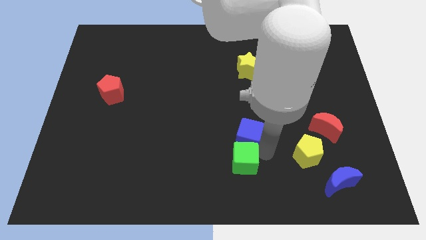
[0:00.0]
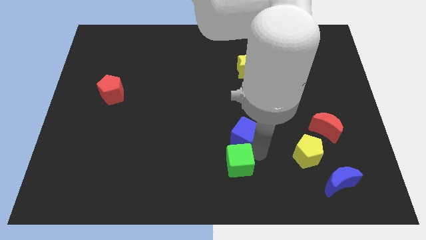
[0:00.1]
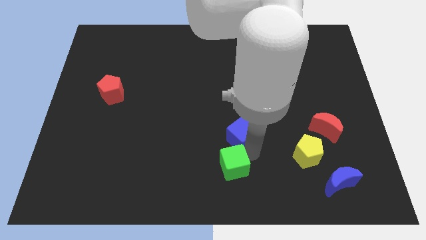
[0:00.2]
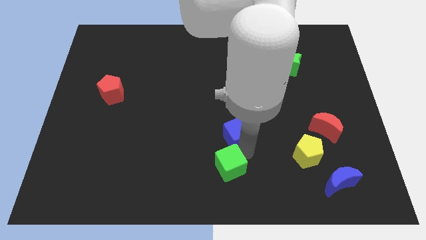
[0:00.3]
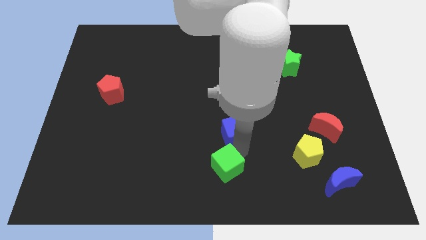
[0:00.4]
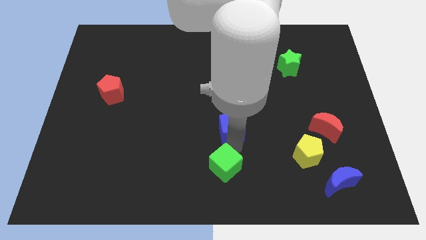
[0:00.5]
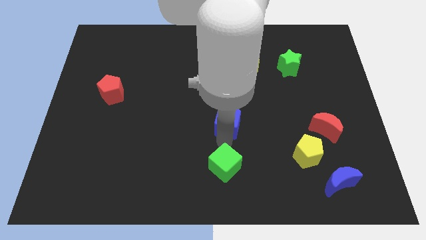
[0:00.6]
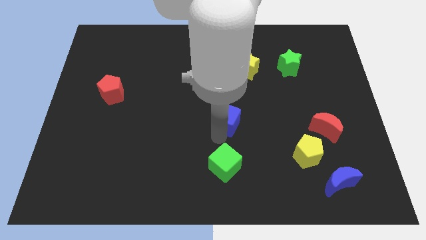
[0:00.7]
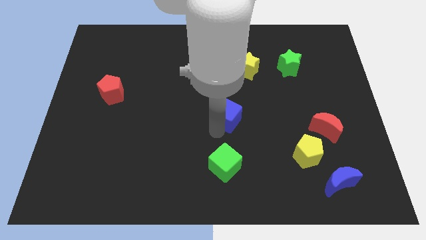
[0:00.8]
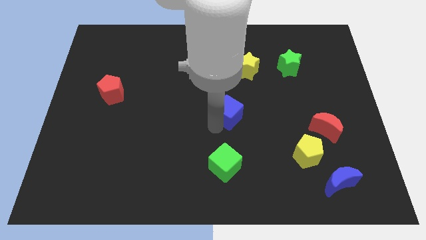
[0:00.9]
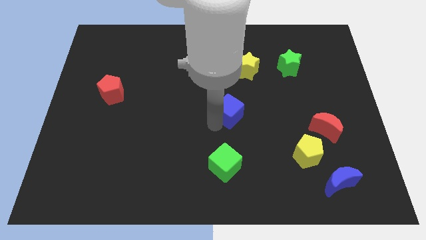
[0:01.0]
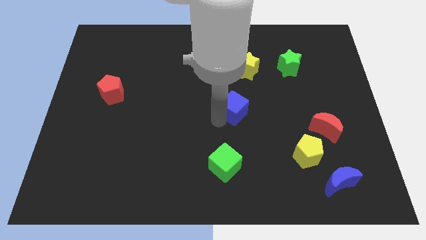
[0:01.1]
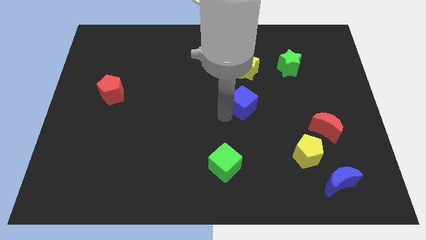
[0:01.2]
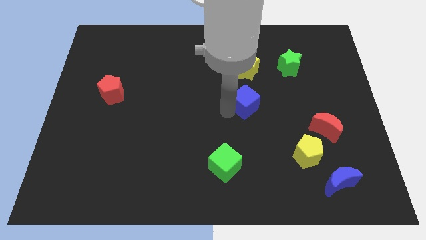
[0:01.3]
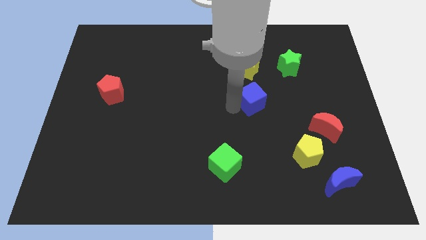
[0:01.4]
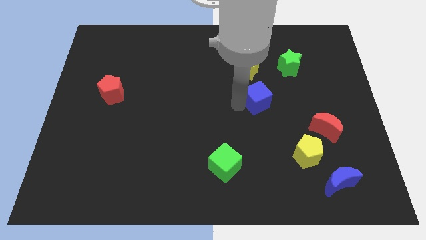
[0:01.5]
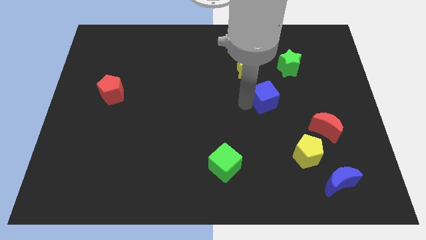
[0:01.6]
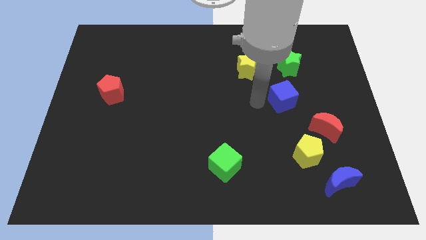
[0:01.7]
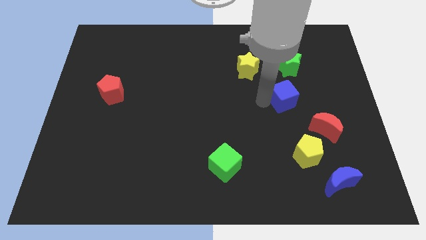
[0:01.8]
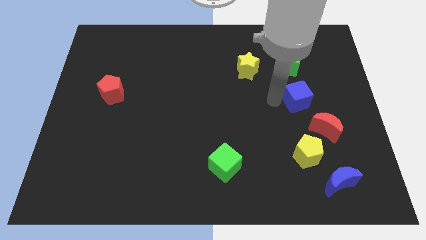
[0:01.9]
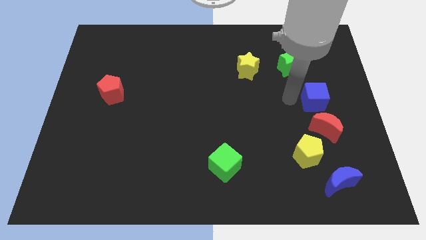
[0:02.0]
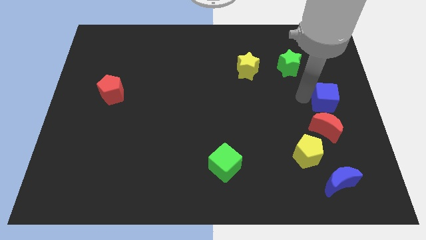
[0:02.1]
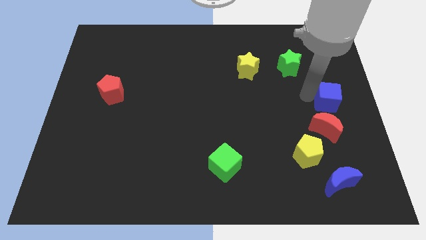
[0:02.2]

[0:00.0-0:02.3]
move blue cube to the top of red moon

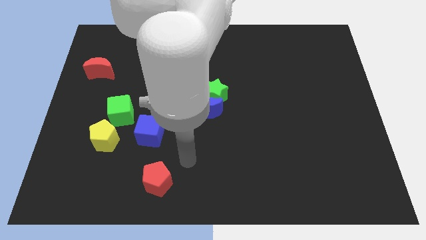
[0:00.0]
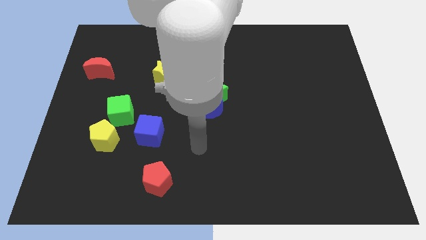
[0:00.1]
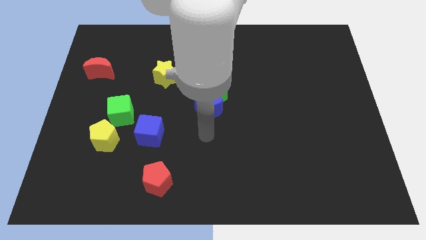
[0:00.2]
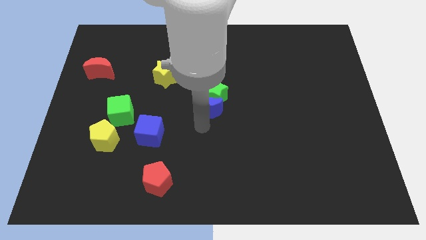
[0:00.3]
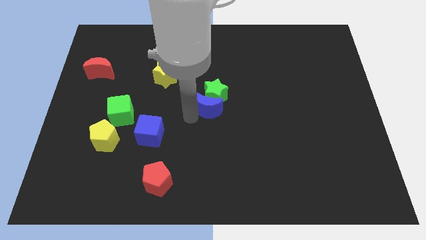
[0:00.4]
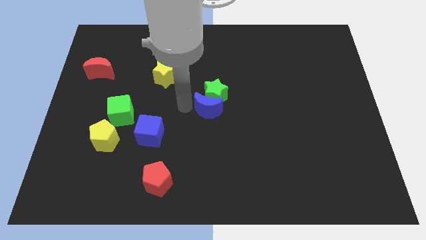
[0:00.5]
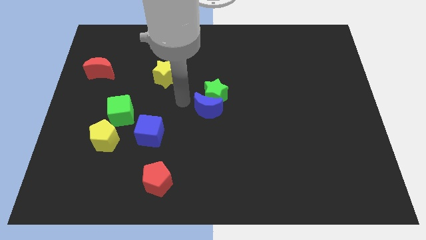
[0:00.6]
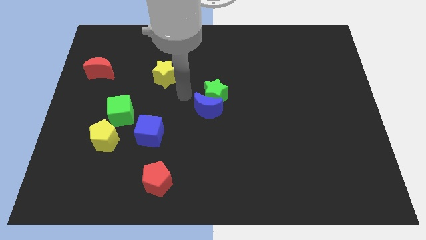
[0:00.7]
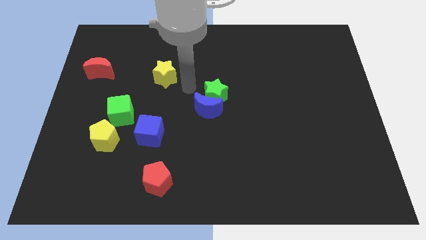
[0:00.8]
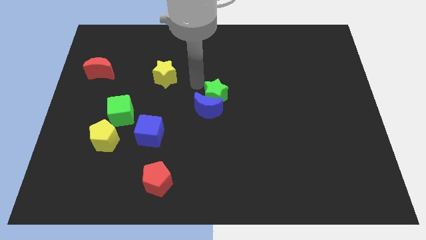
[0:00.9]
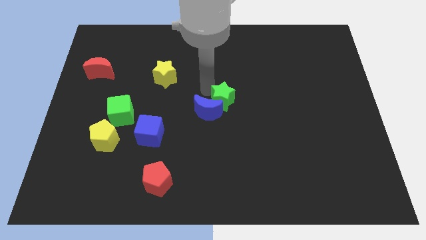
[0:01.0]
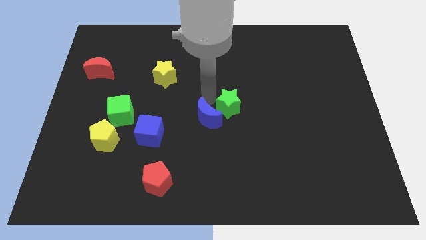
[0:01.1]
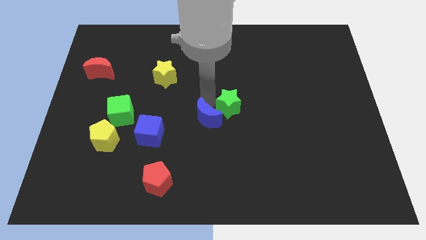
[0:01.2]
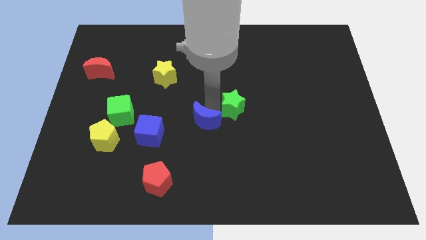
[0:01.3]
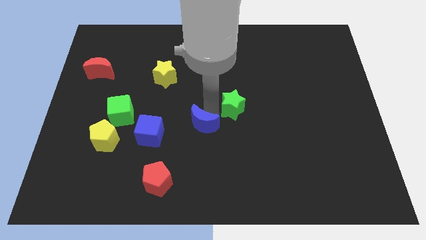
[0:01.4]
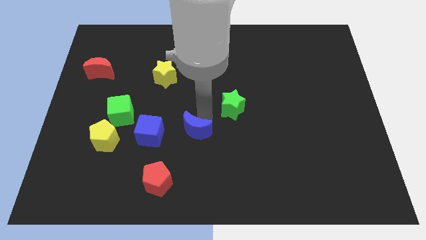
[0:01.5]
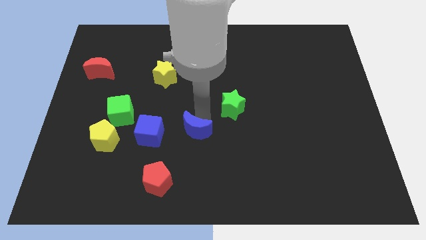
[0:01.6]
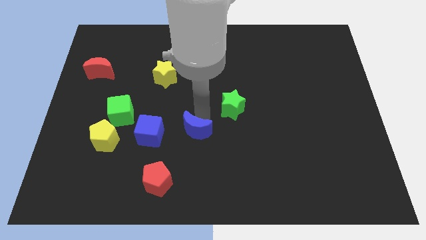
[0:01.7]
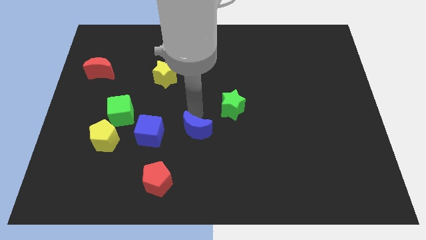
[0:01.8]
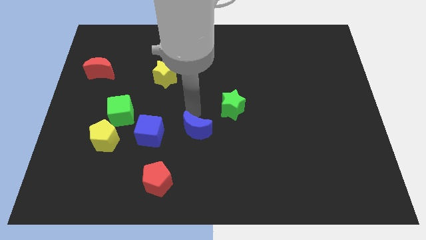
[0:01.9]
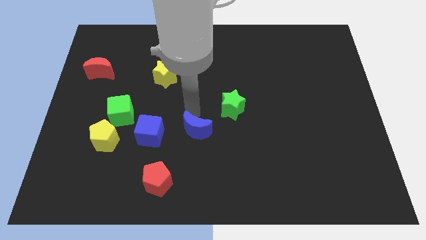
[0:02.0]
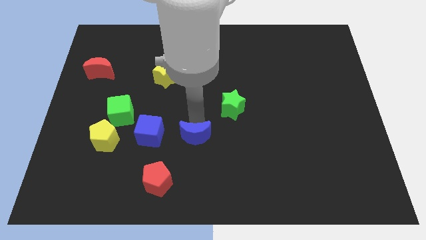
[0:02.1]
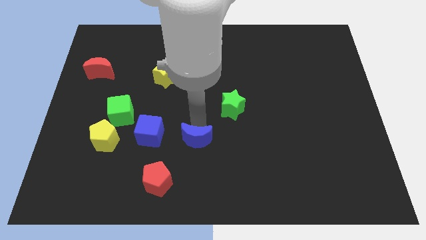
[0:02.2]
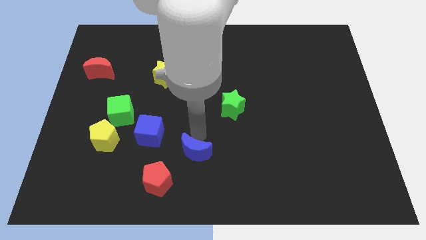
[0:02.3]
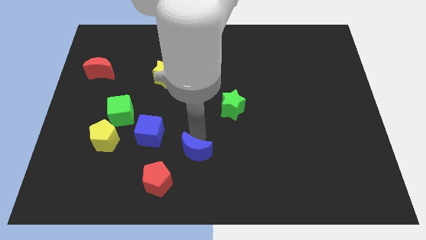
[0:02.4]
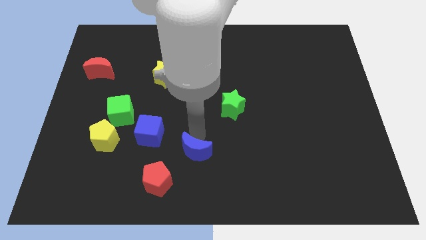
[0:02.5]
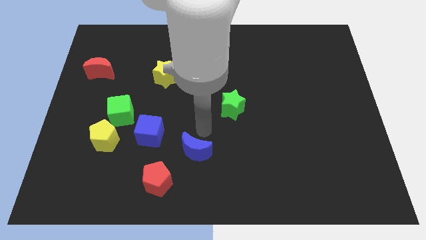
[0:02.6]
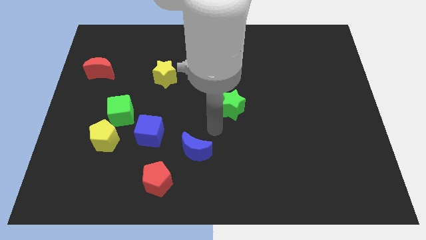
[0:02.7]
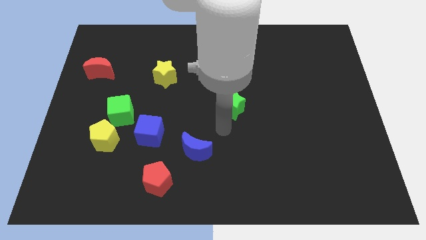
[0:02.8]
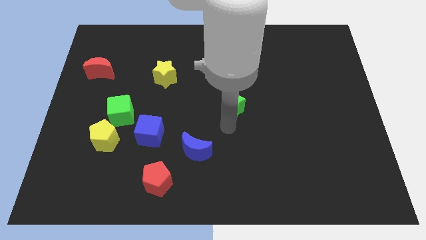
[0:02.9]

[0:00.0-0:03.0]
separate the blue crescent from the green star

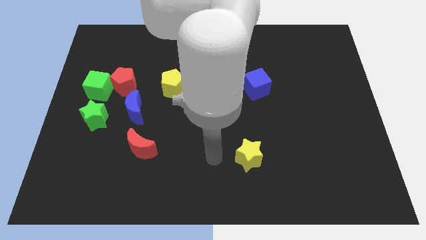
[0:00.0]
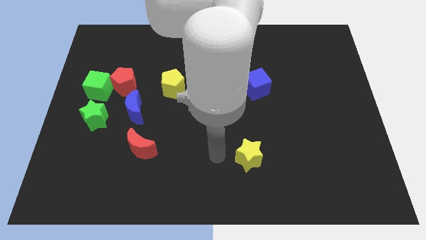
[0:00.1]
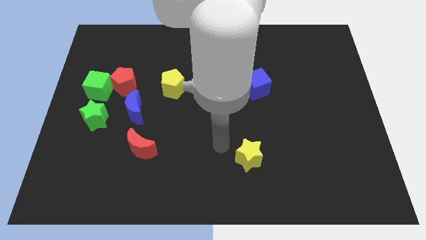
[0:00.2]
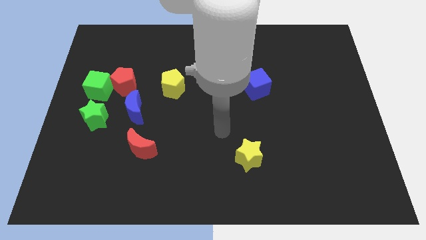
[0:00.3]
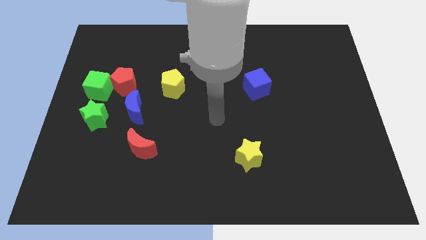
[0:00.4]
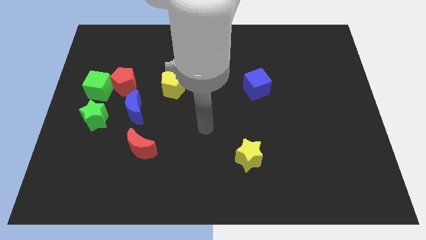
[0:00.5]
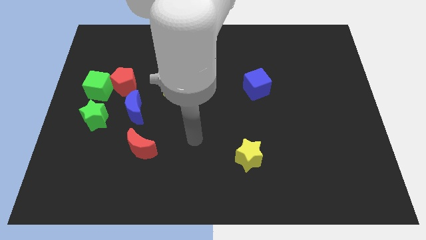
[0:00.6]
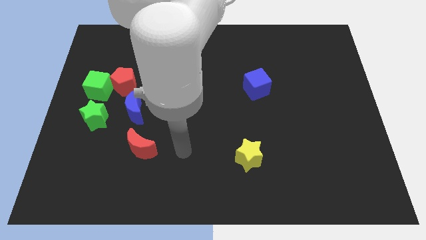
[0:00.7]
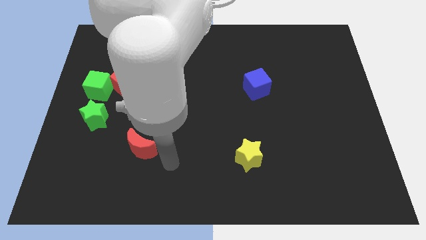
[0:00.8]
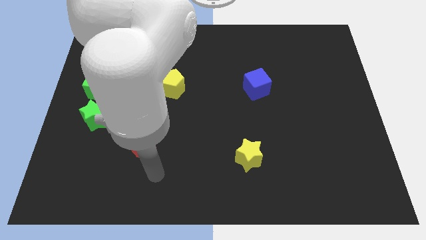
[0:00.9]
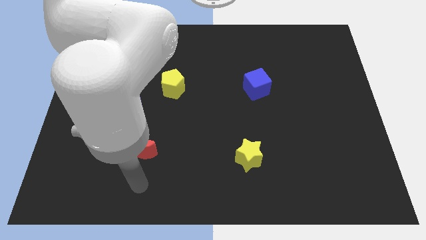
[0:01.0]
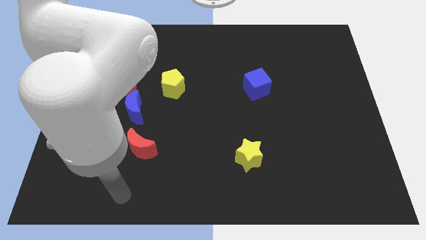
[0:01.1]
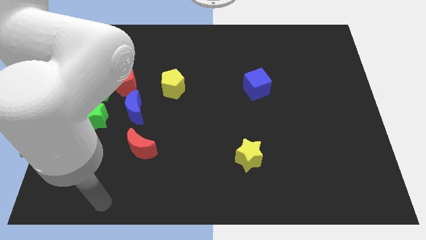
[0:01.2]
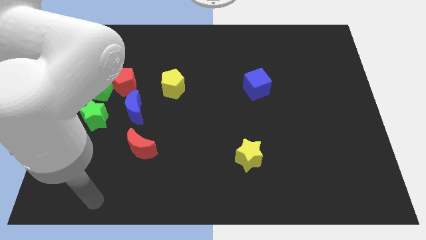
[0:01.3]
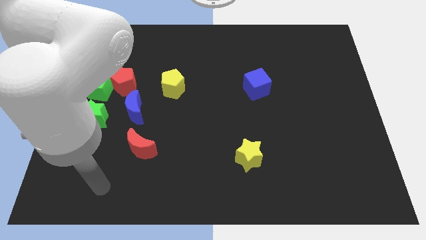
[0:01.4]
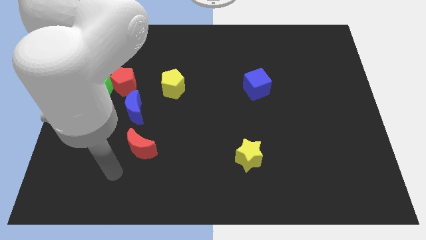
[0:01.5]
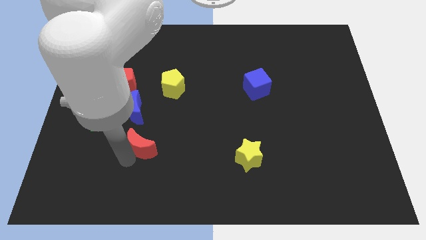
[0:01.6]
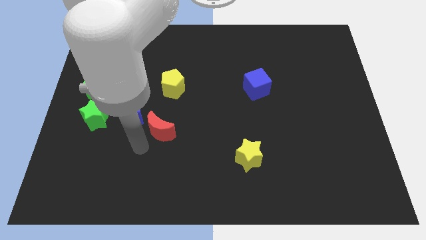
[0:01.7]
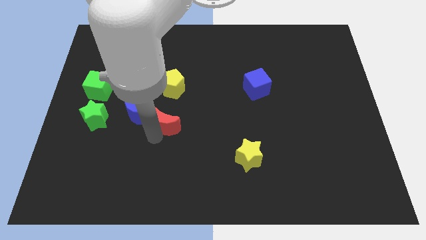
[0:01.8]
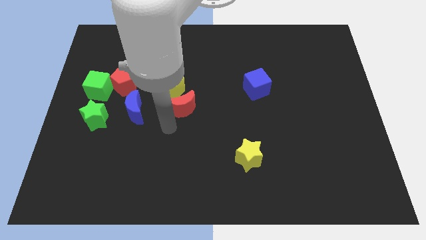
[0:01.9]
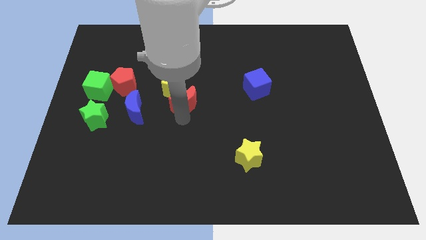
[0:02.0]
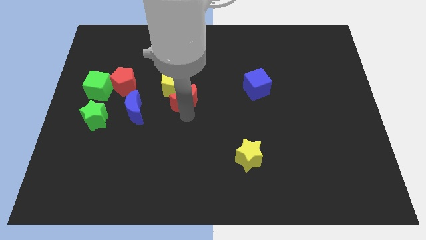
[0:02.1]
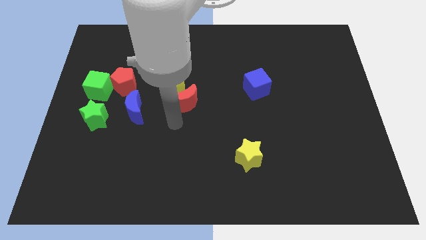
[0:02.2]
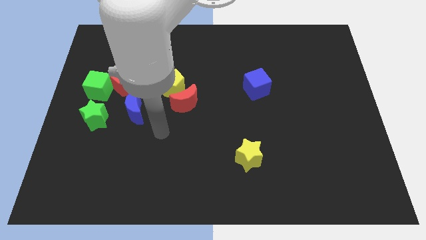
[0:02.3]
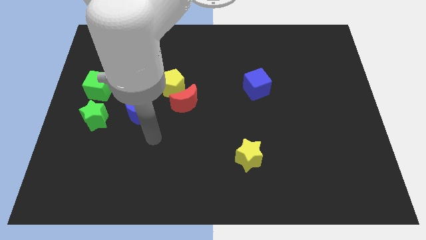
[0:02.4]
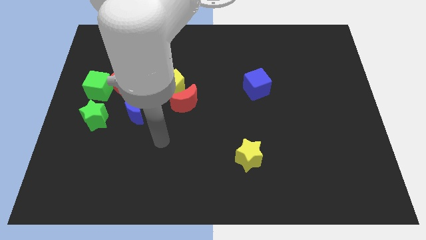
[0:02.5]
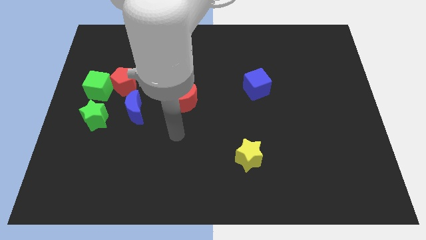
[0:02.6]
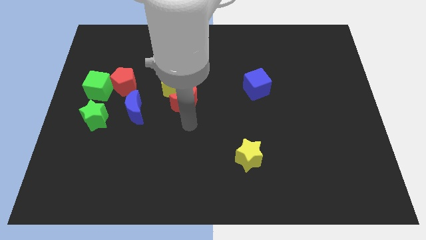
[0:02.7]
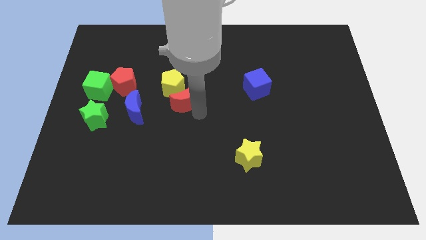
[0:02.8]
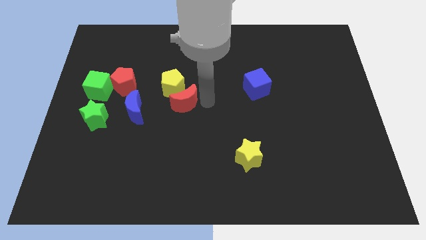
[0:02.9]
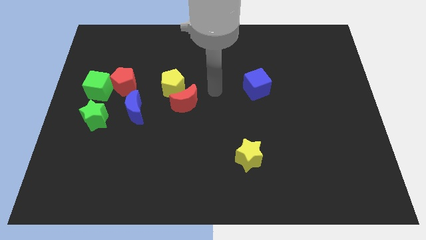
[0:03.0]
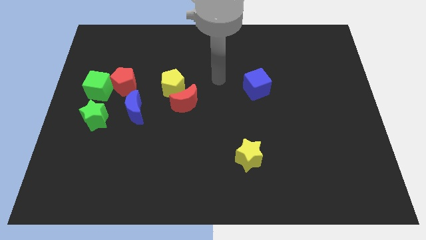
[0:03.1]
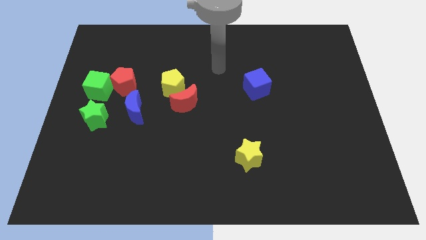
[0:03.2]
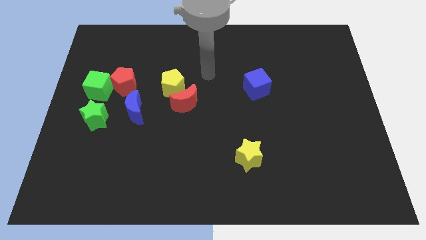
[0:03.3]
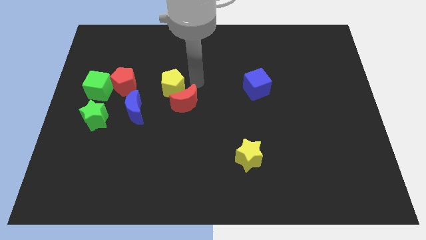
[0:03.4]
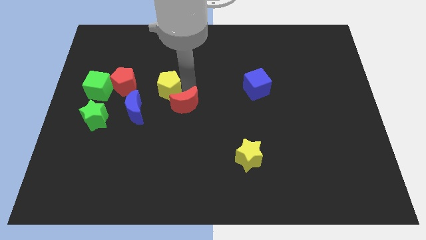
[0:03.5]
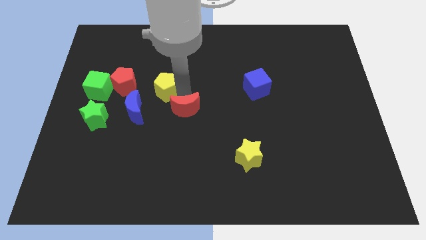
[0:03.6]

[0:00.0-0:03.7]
move the red moon below the yellow pentagon
